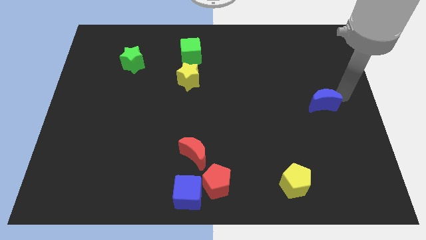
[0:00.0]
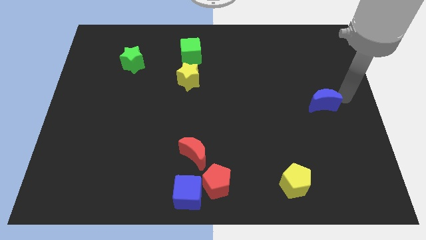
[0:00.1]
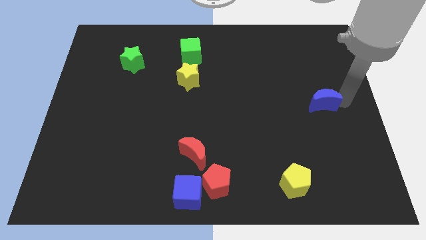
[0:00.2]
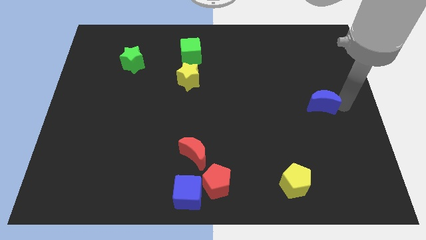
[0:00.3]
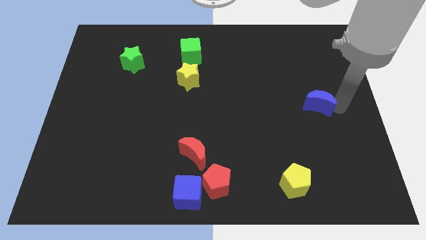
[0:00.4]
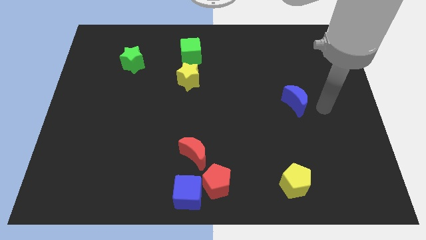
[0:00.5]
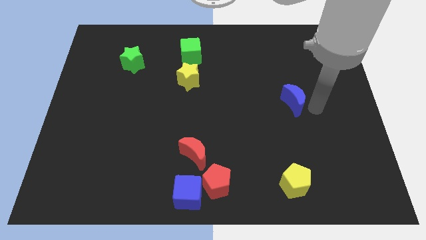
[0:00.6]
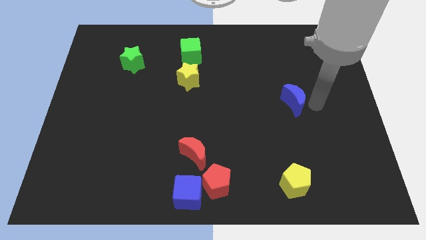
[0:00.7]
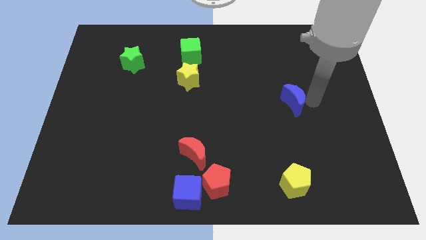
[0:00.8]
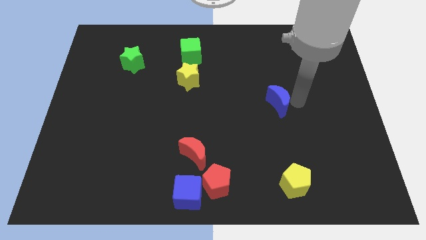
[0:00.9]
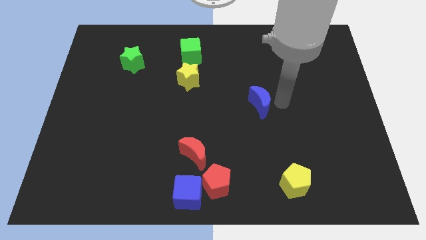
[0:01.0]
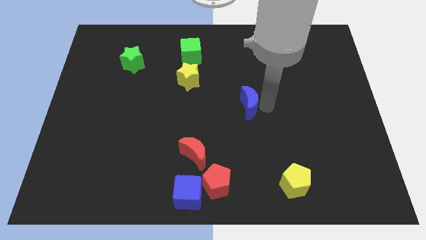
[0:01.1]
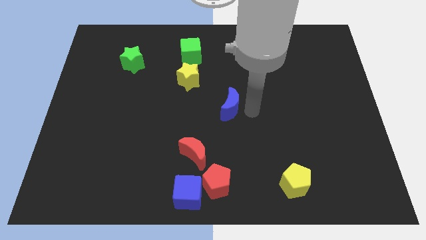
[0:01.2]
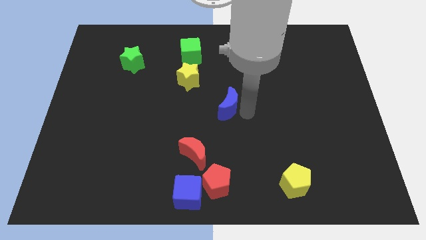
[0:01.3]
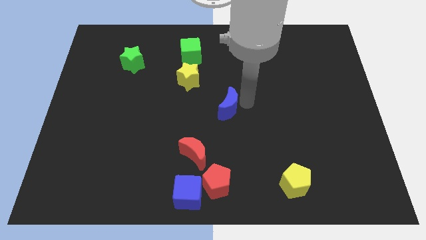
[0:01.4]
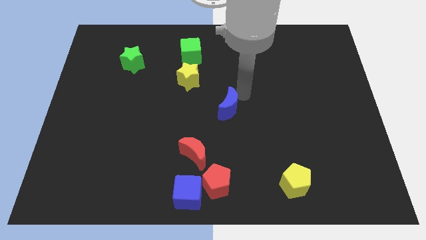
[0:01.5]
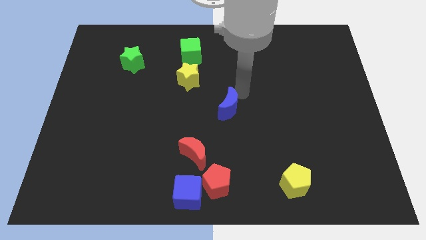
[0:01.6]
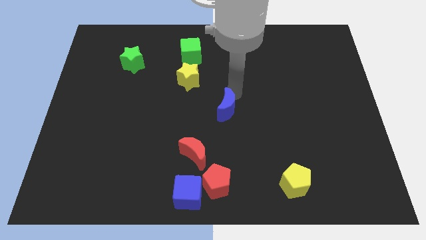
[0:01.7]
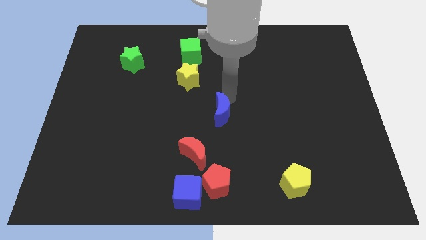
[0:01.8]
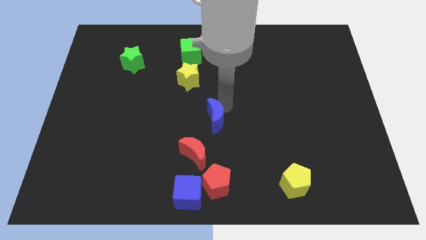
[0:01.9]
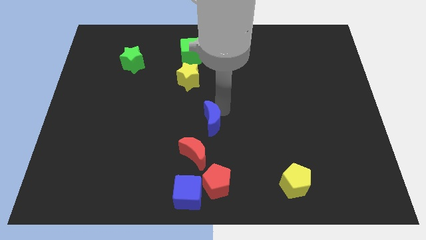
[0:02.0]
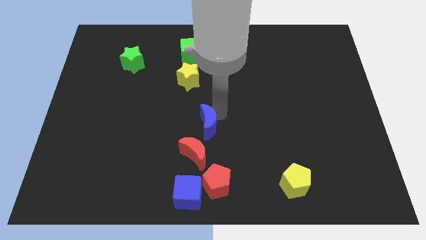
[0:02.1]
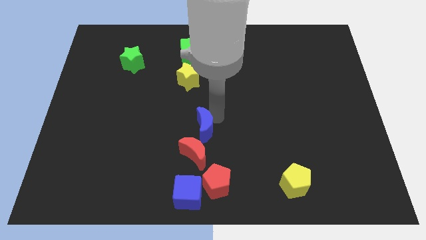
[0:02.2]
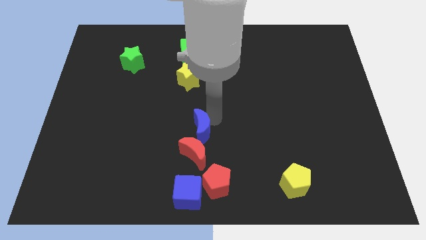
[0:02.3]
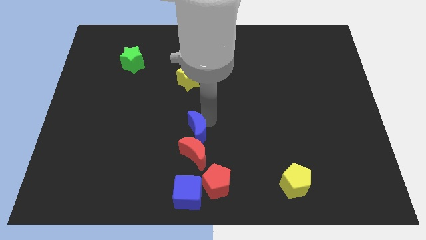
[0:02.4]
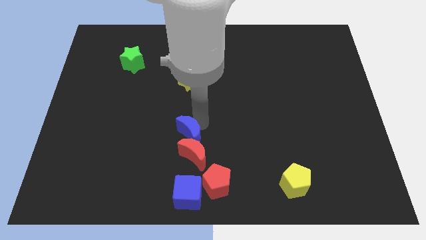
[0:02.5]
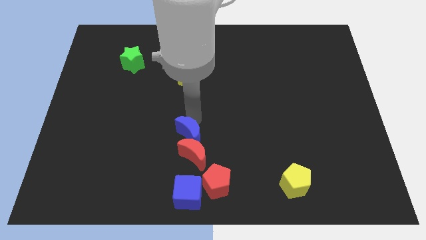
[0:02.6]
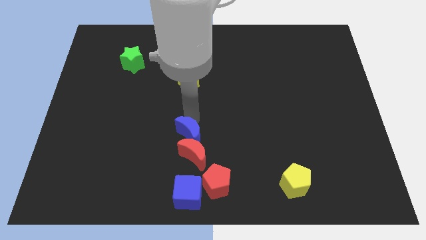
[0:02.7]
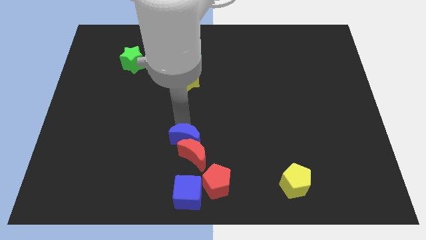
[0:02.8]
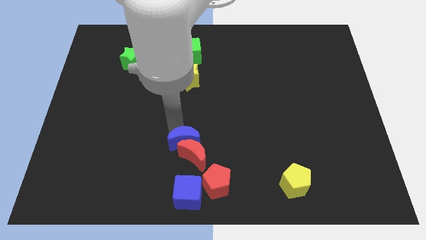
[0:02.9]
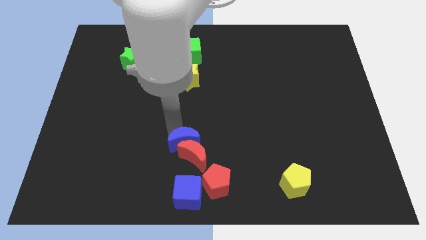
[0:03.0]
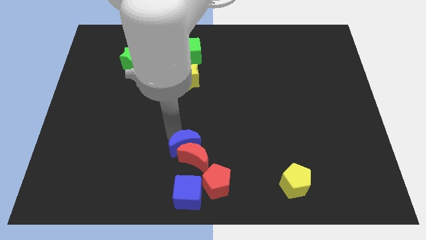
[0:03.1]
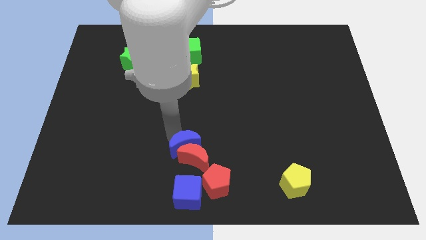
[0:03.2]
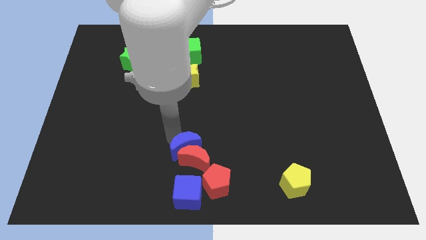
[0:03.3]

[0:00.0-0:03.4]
push the blue crescent into red crescent

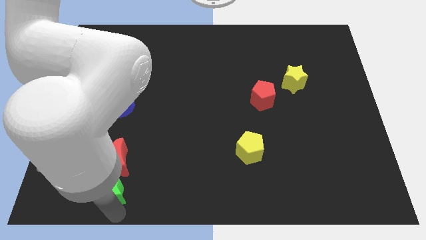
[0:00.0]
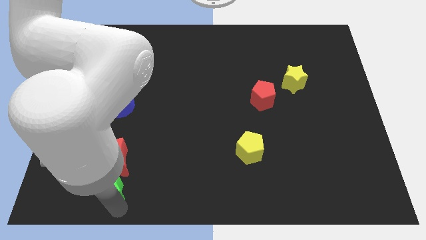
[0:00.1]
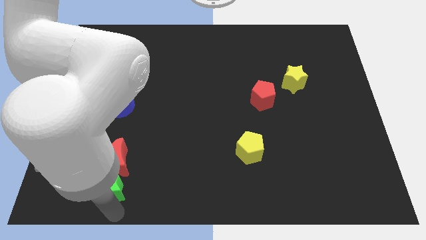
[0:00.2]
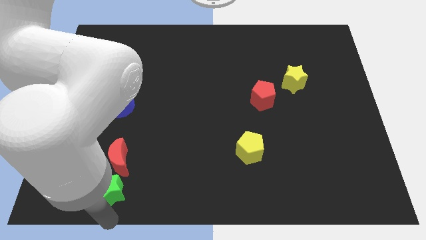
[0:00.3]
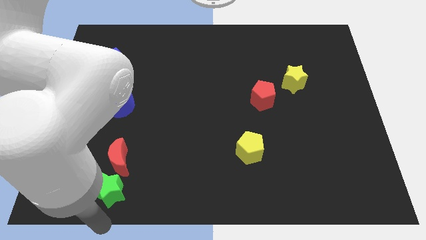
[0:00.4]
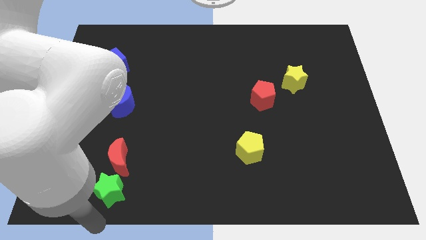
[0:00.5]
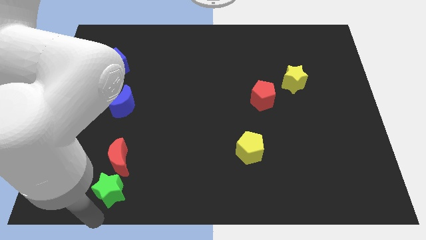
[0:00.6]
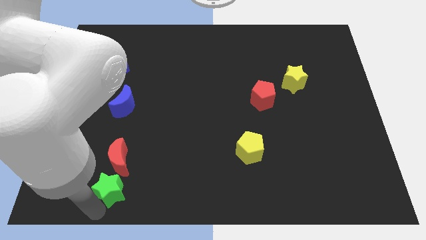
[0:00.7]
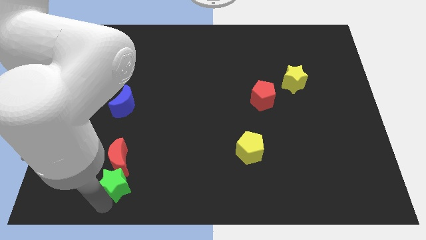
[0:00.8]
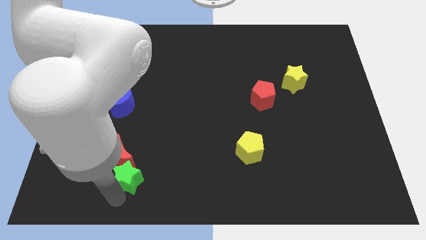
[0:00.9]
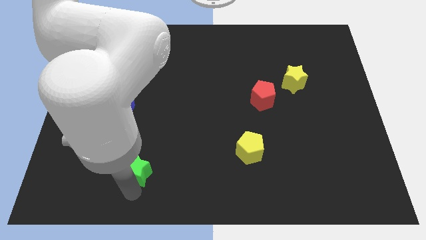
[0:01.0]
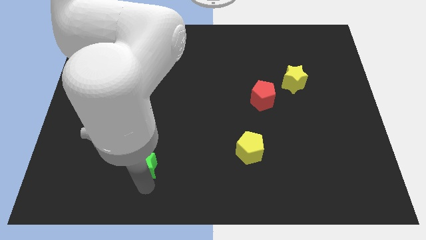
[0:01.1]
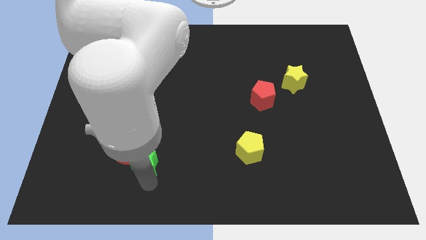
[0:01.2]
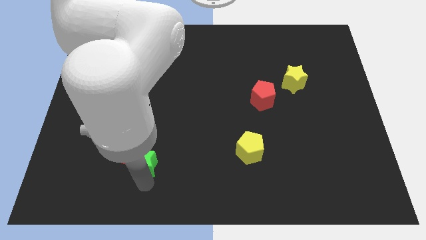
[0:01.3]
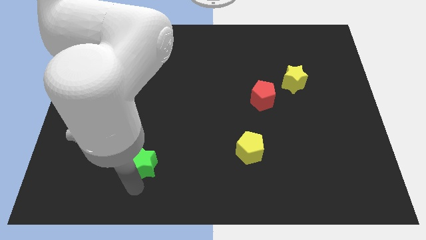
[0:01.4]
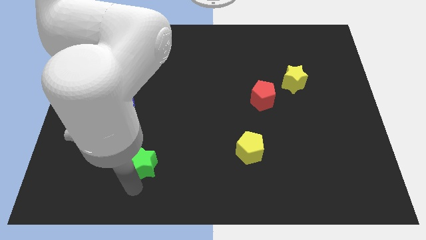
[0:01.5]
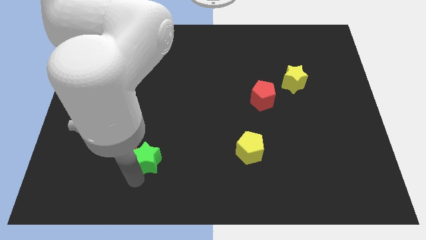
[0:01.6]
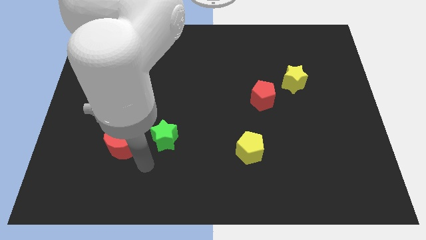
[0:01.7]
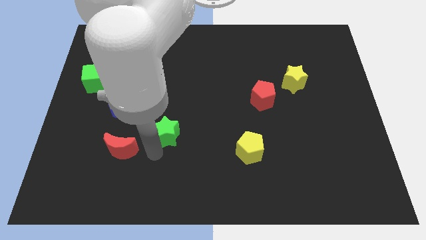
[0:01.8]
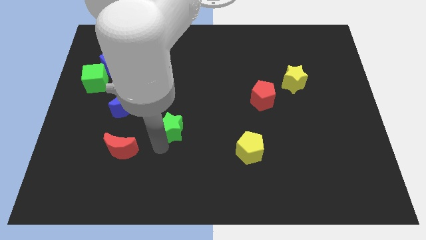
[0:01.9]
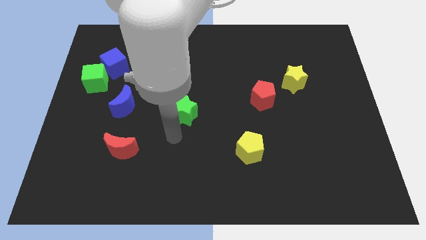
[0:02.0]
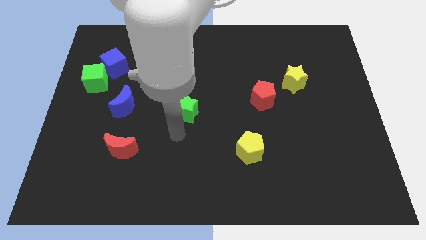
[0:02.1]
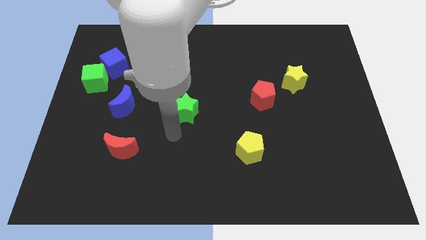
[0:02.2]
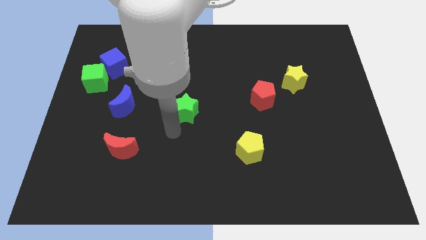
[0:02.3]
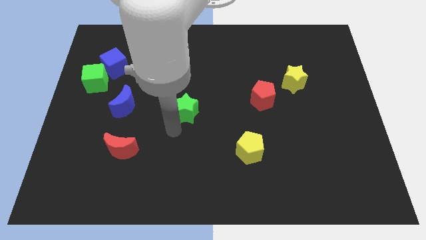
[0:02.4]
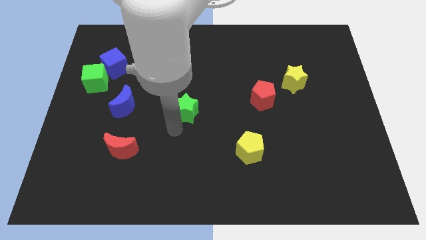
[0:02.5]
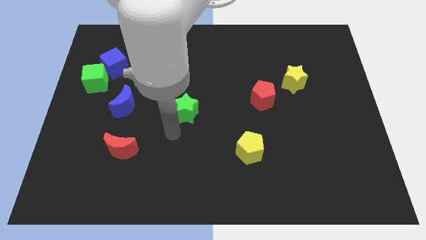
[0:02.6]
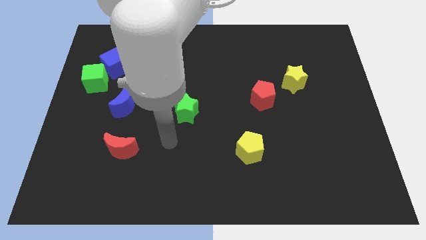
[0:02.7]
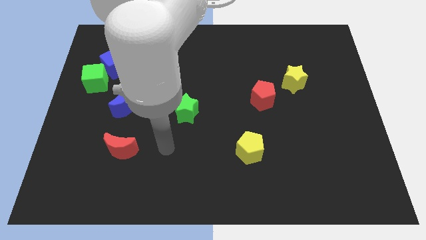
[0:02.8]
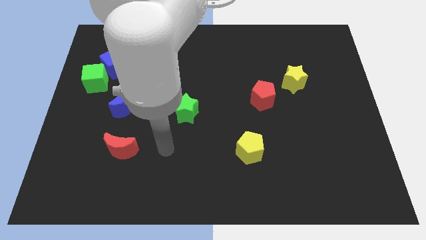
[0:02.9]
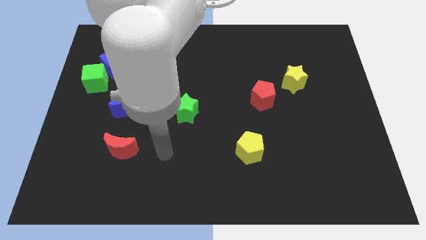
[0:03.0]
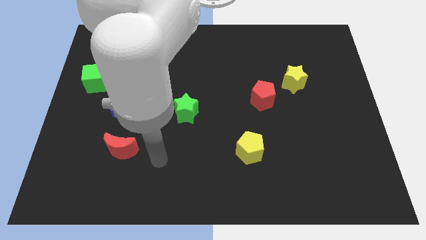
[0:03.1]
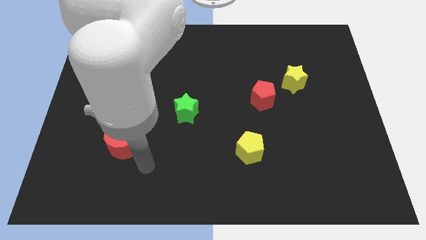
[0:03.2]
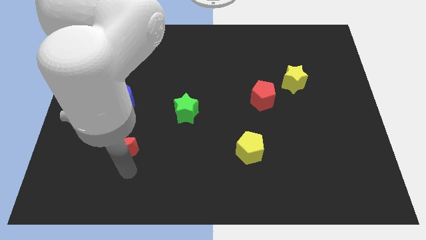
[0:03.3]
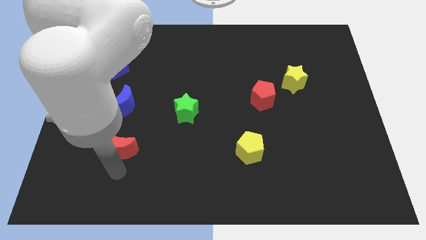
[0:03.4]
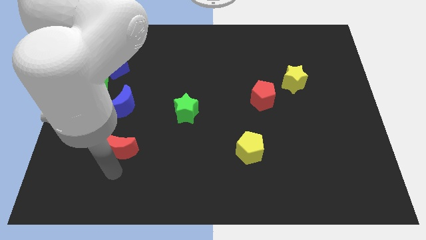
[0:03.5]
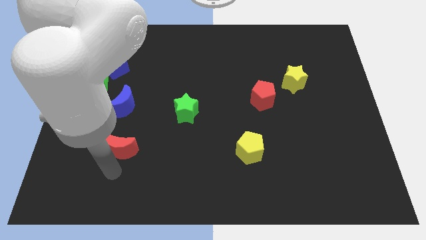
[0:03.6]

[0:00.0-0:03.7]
move the green star near to the right of blue crescent

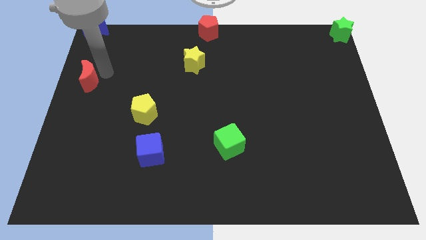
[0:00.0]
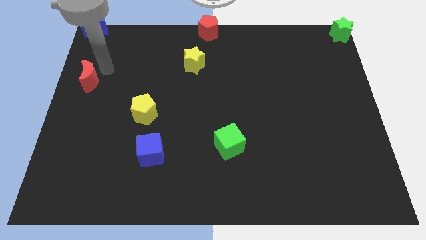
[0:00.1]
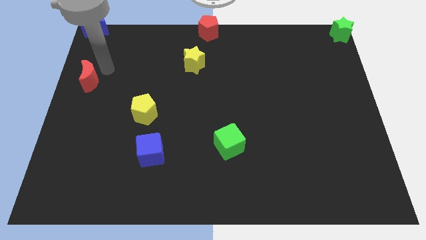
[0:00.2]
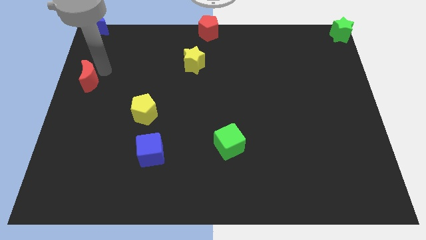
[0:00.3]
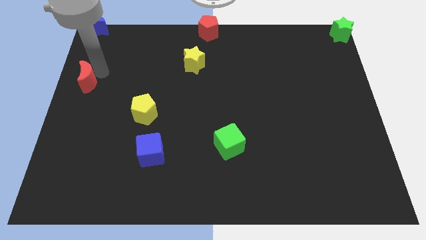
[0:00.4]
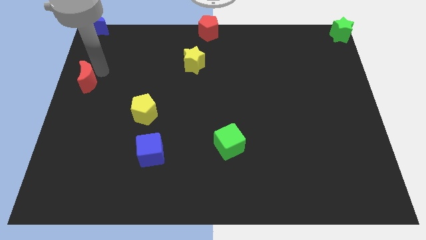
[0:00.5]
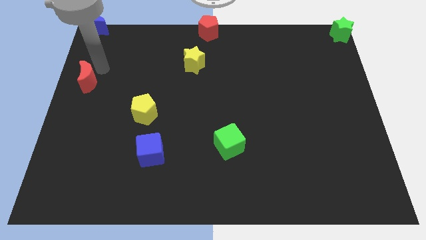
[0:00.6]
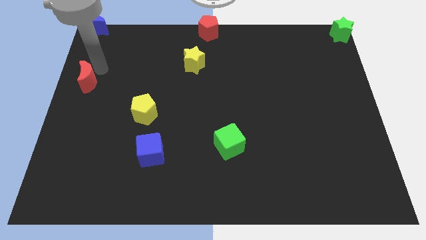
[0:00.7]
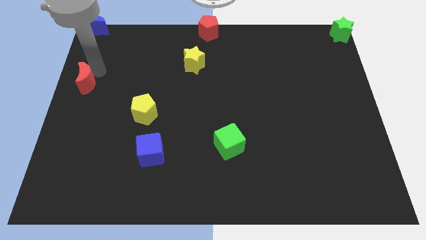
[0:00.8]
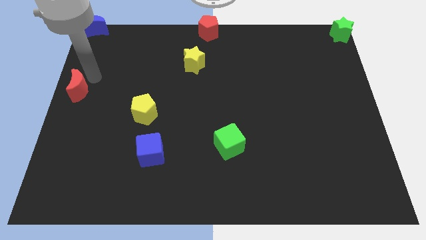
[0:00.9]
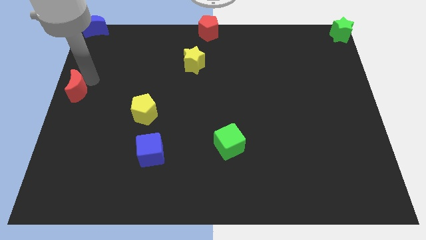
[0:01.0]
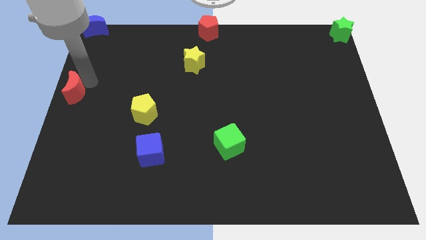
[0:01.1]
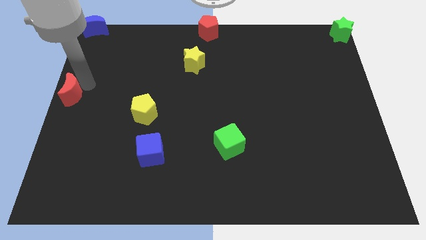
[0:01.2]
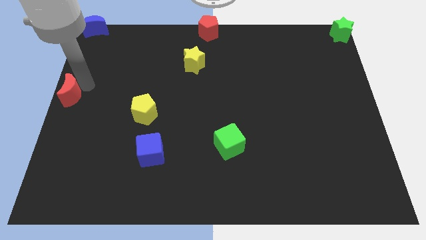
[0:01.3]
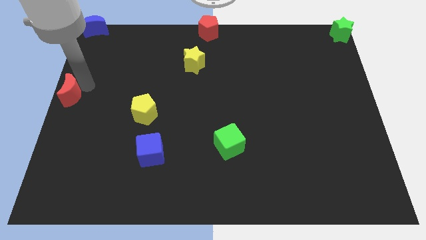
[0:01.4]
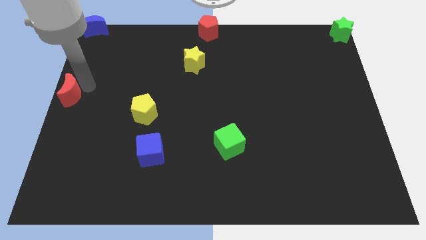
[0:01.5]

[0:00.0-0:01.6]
push the red crescent to the left center of the board

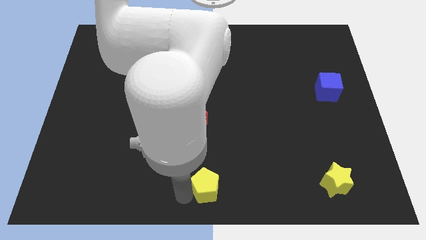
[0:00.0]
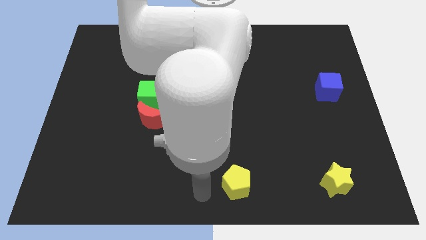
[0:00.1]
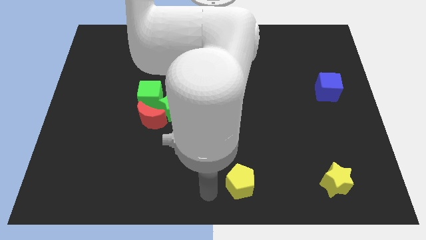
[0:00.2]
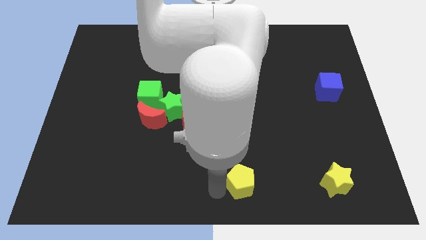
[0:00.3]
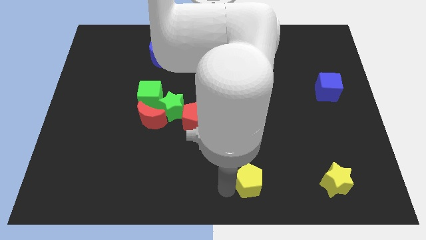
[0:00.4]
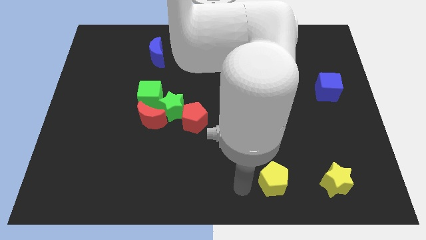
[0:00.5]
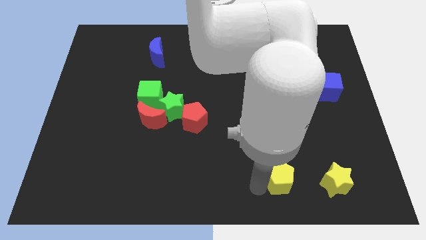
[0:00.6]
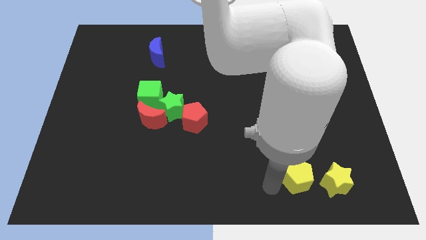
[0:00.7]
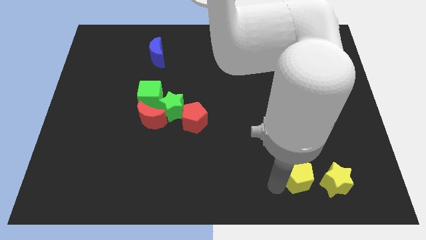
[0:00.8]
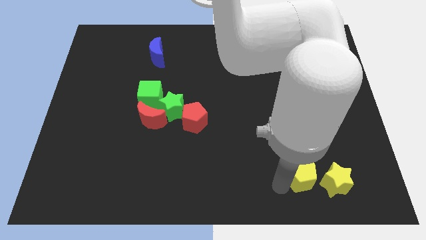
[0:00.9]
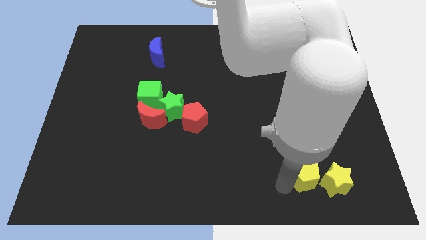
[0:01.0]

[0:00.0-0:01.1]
move yellow pentagon towards yellow star
